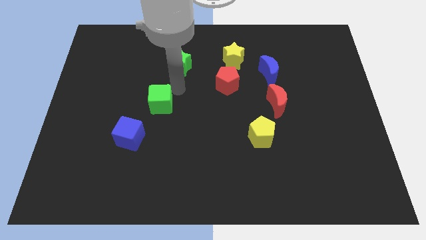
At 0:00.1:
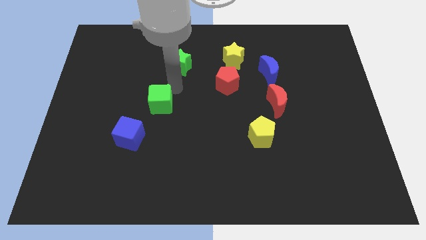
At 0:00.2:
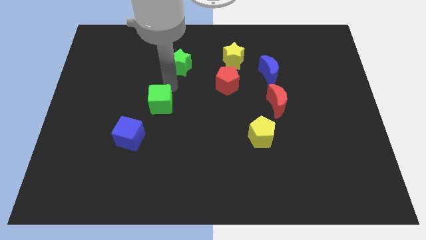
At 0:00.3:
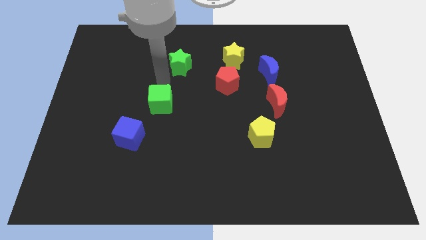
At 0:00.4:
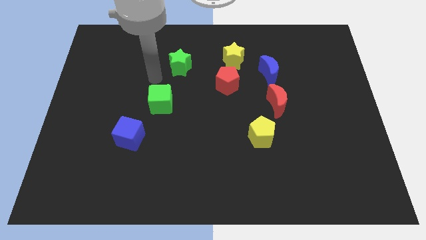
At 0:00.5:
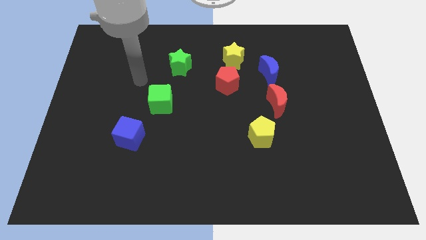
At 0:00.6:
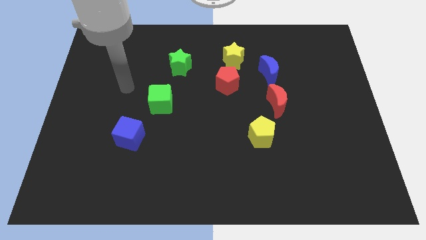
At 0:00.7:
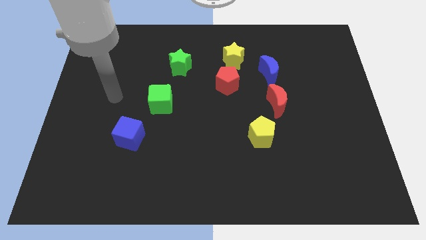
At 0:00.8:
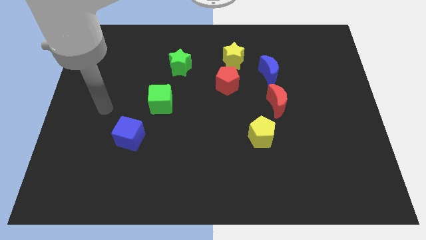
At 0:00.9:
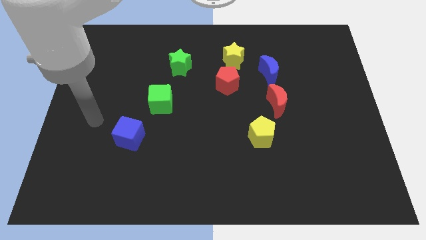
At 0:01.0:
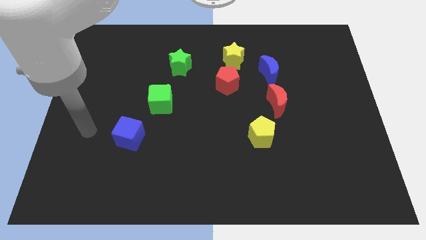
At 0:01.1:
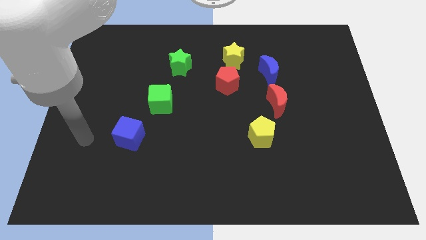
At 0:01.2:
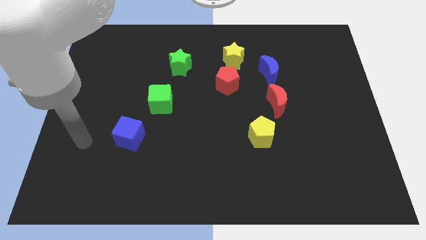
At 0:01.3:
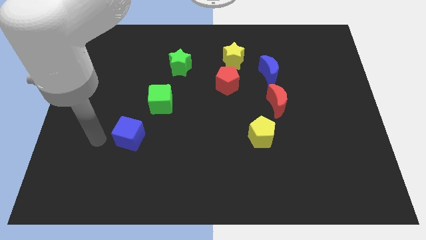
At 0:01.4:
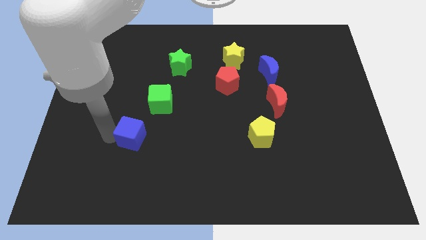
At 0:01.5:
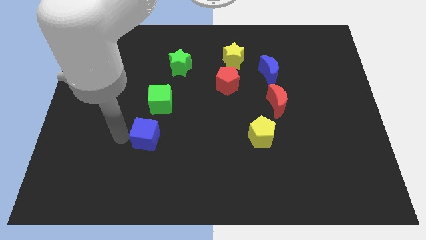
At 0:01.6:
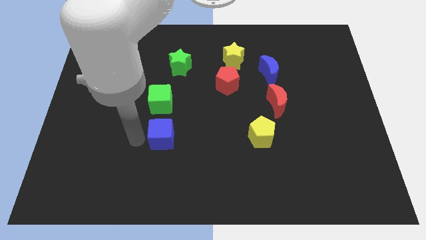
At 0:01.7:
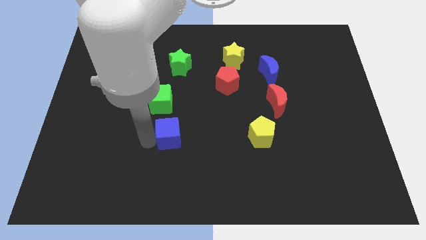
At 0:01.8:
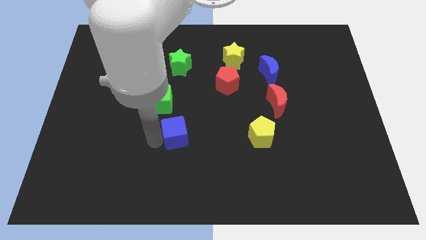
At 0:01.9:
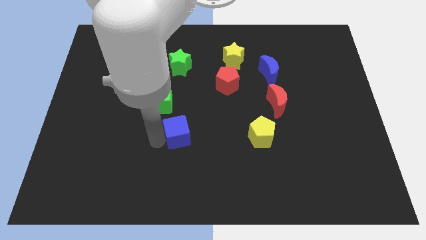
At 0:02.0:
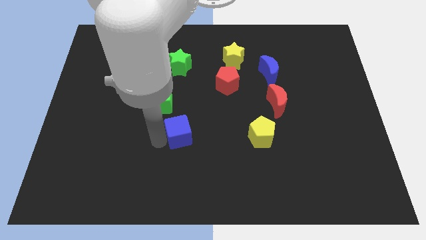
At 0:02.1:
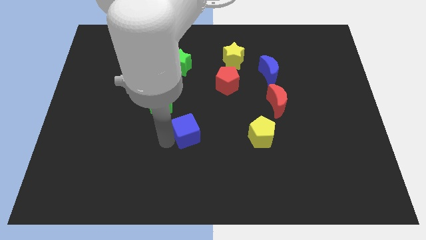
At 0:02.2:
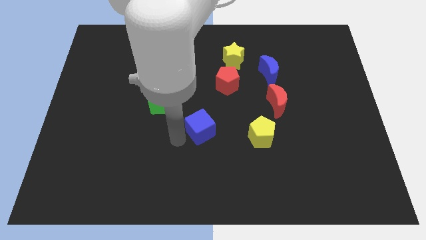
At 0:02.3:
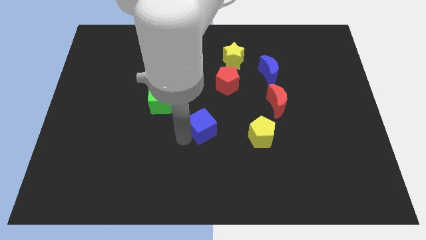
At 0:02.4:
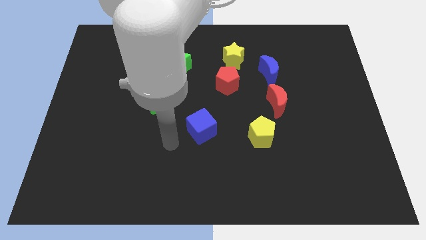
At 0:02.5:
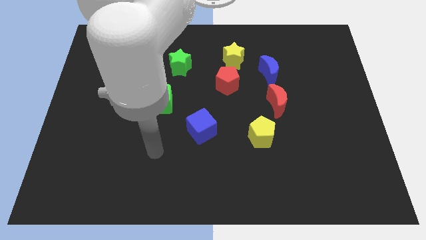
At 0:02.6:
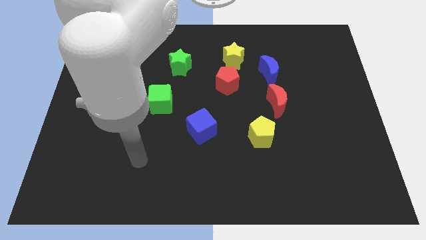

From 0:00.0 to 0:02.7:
put the blue cube diagonally bottom right to the green cube

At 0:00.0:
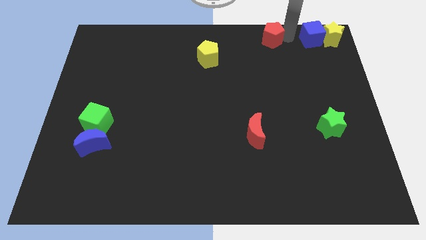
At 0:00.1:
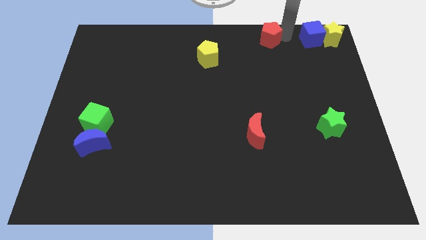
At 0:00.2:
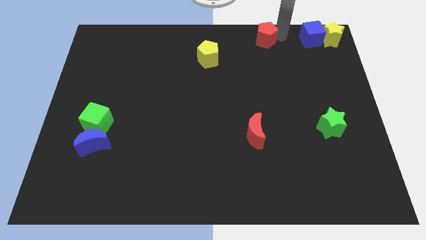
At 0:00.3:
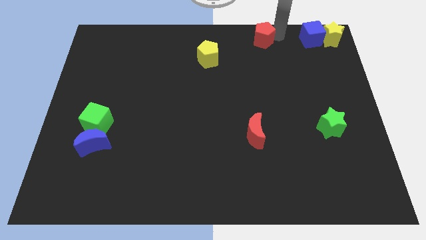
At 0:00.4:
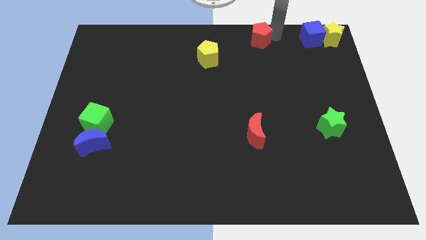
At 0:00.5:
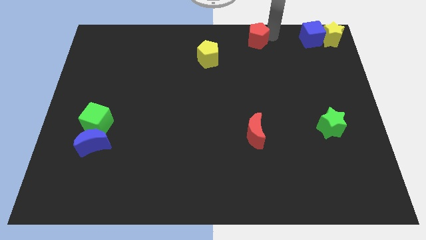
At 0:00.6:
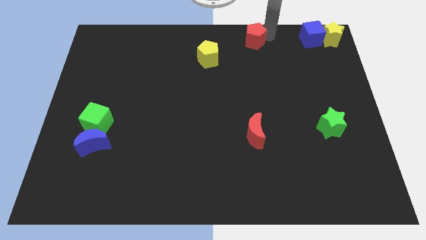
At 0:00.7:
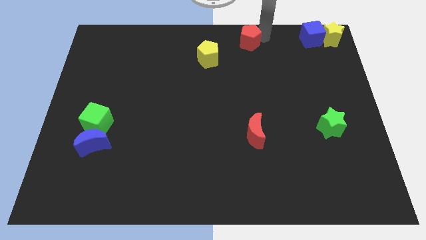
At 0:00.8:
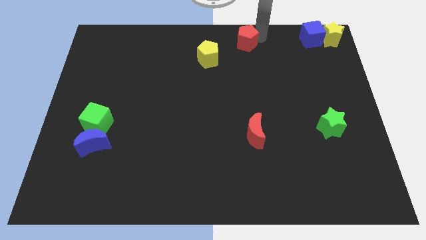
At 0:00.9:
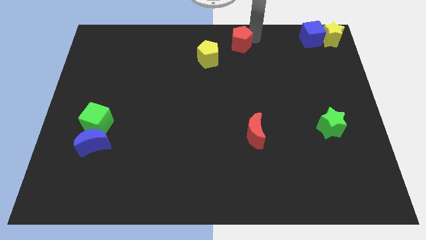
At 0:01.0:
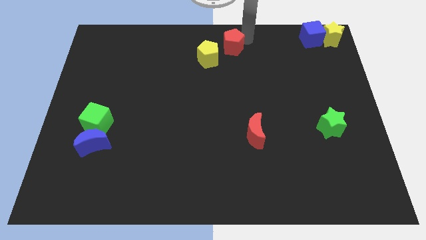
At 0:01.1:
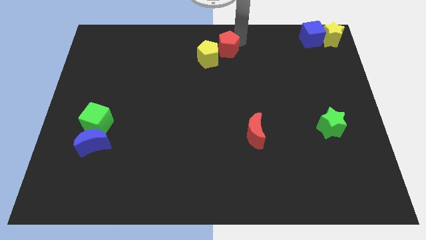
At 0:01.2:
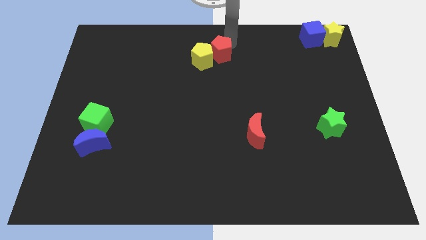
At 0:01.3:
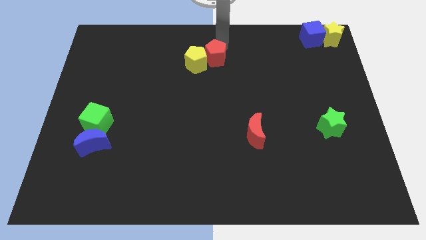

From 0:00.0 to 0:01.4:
push the red pentagon into the yellow pentagon

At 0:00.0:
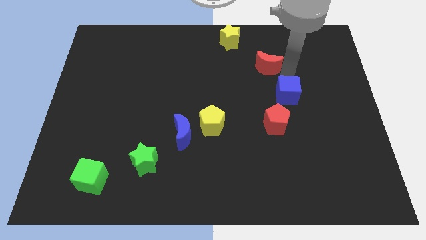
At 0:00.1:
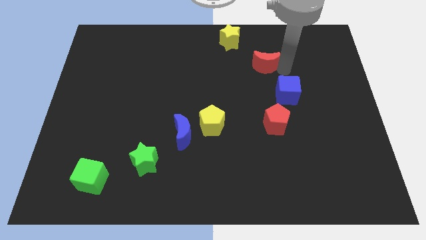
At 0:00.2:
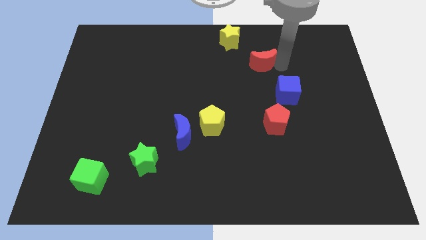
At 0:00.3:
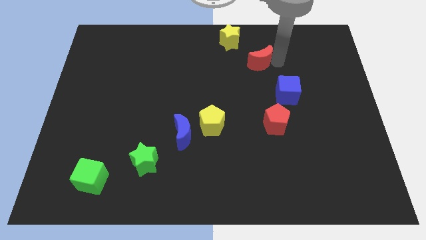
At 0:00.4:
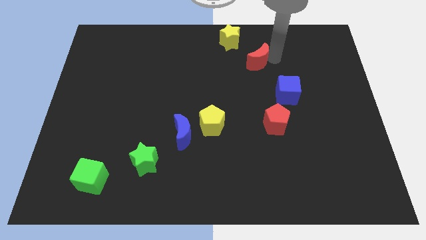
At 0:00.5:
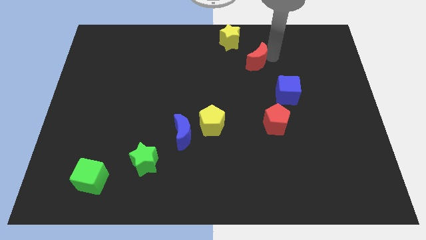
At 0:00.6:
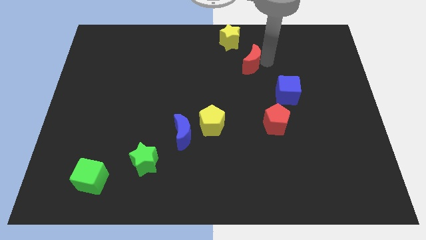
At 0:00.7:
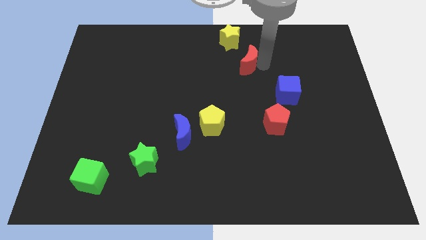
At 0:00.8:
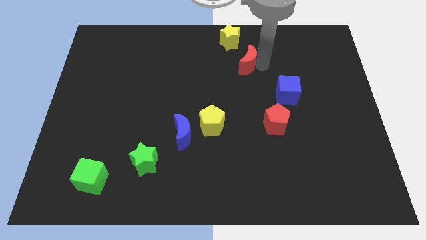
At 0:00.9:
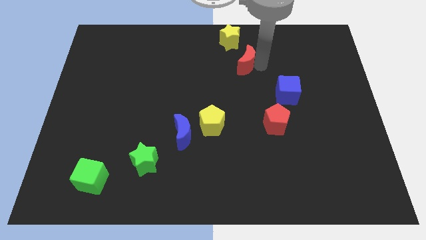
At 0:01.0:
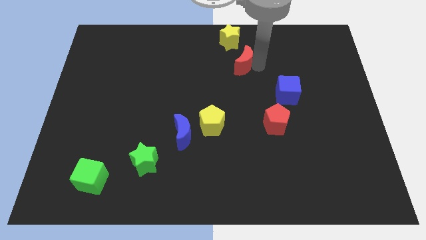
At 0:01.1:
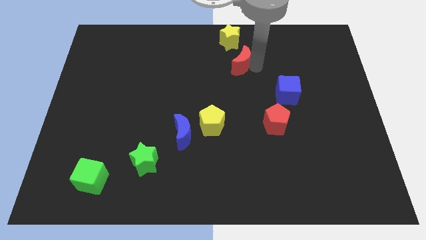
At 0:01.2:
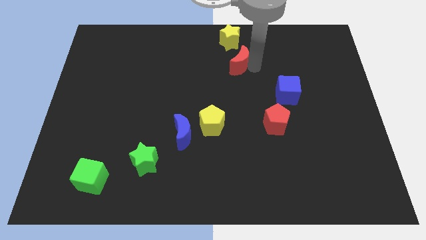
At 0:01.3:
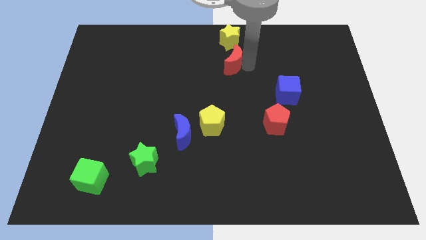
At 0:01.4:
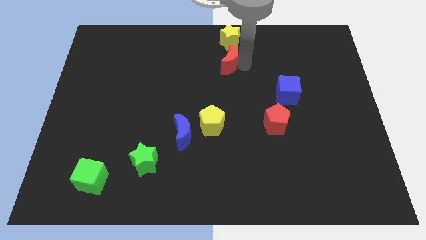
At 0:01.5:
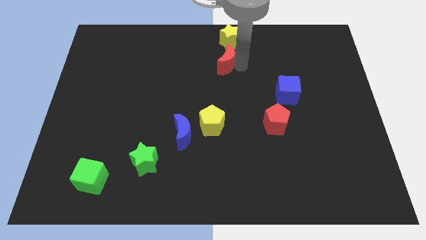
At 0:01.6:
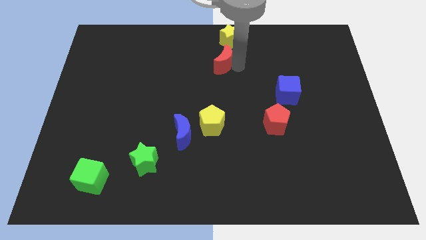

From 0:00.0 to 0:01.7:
put the red moon vertically below the yellow star

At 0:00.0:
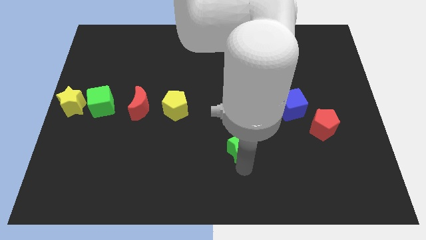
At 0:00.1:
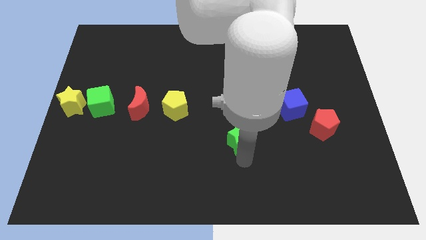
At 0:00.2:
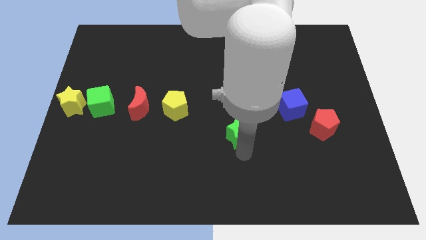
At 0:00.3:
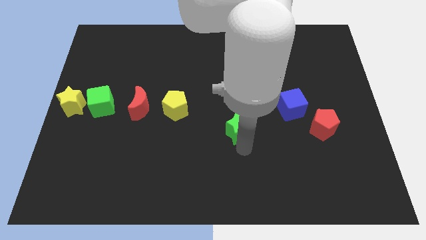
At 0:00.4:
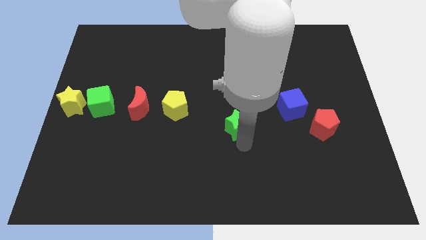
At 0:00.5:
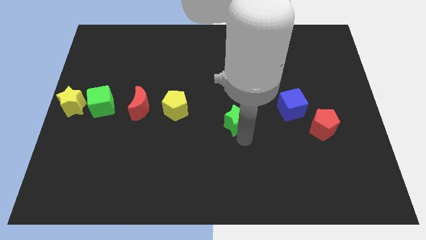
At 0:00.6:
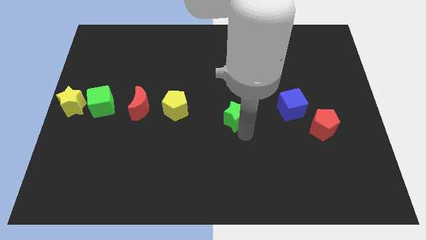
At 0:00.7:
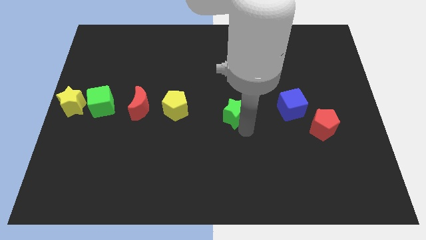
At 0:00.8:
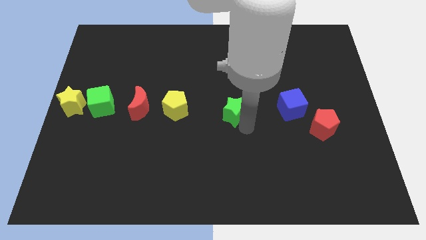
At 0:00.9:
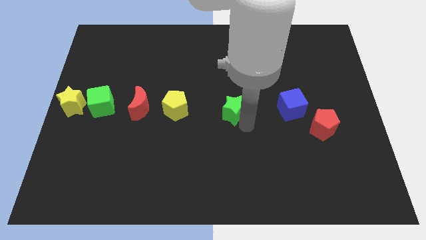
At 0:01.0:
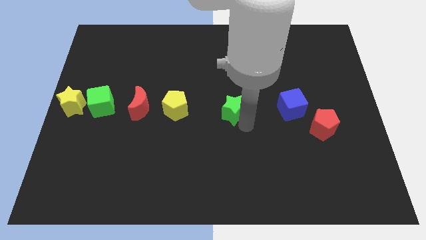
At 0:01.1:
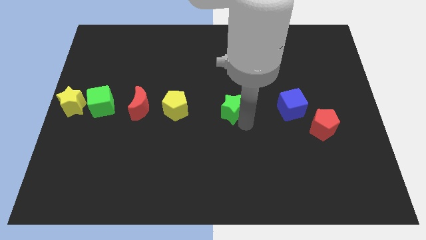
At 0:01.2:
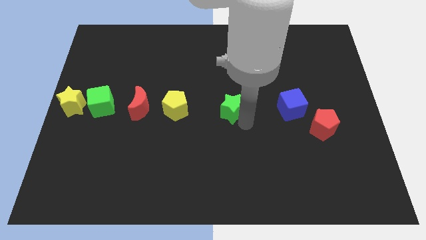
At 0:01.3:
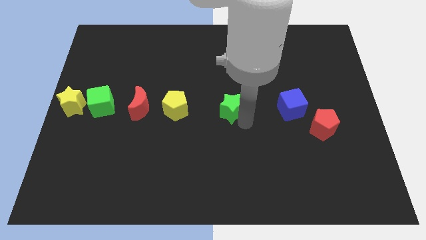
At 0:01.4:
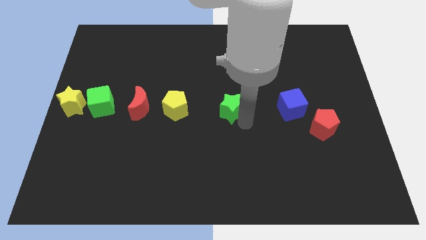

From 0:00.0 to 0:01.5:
push the green star parallel to the yellow pentagon

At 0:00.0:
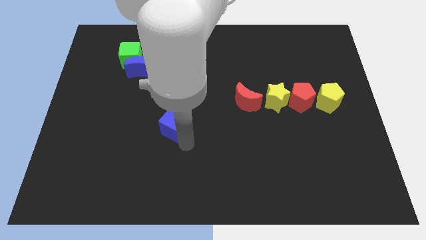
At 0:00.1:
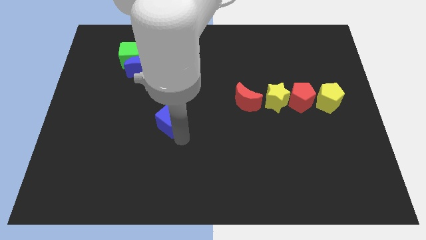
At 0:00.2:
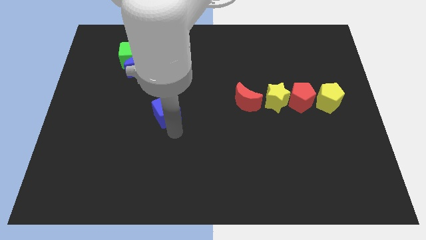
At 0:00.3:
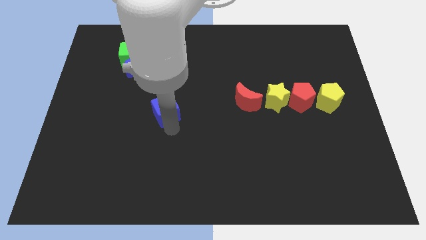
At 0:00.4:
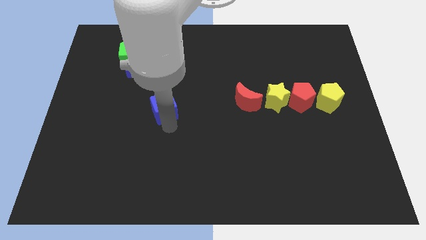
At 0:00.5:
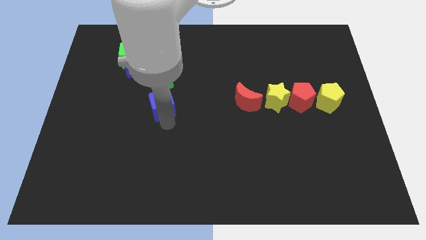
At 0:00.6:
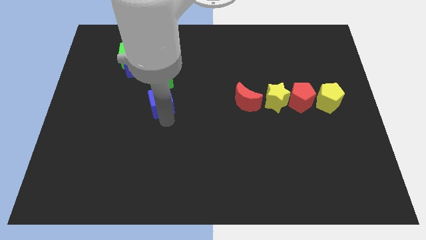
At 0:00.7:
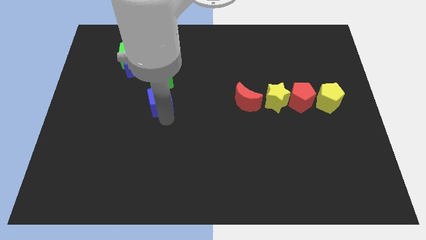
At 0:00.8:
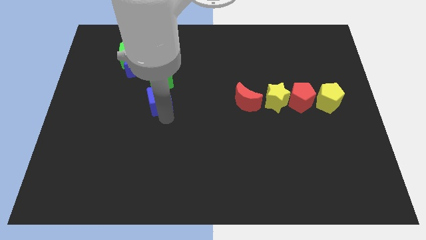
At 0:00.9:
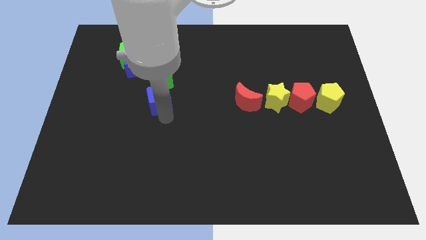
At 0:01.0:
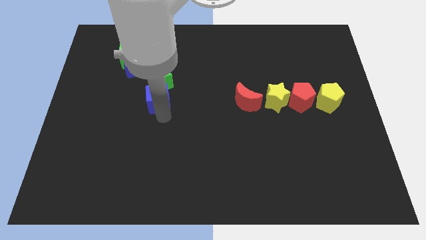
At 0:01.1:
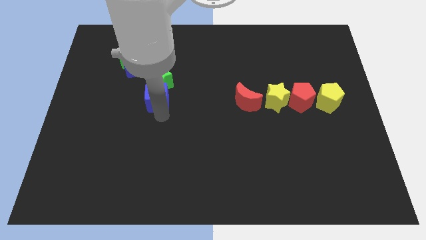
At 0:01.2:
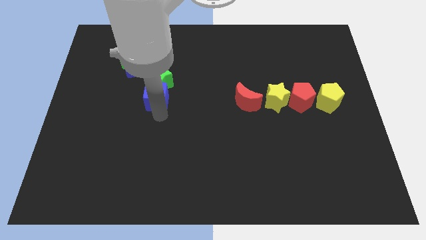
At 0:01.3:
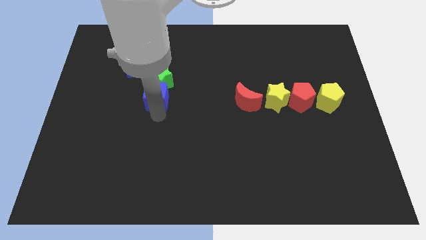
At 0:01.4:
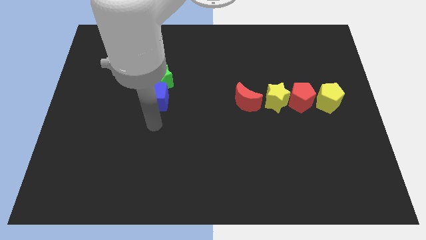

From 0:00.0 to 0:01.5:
push the blue cube into the green star
